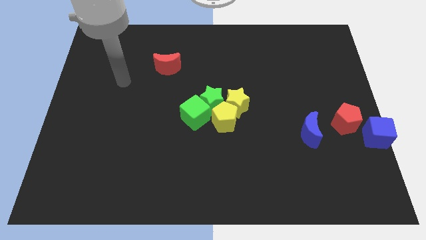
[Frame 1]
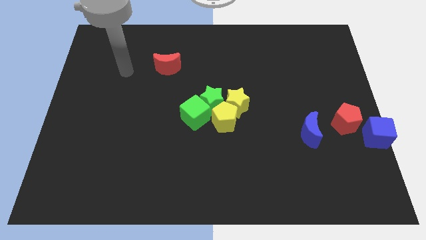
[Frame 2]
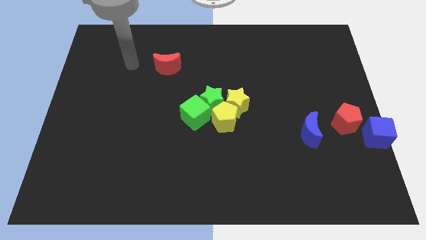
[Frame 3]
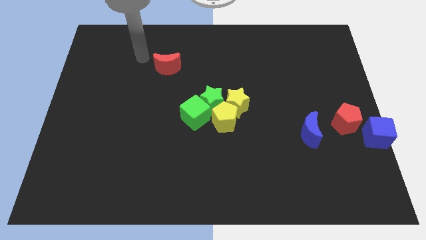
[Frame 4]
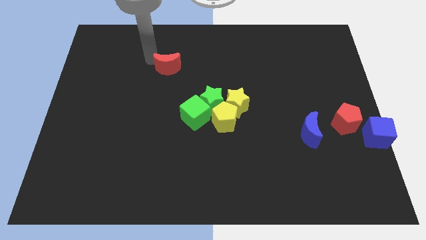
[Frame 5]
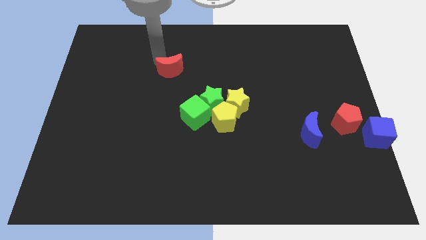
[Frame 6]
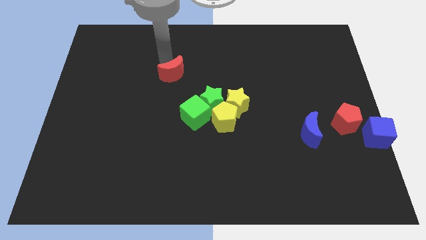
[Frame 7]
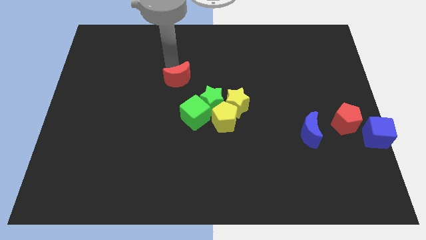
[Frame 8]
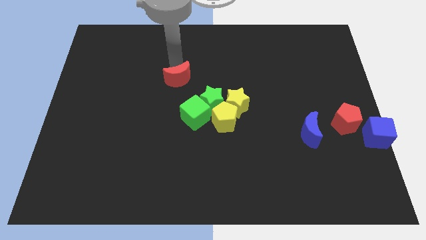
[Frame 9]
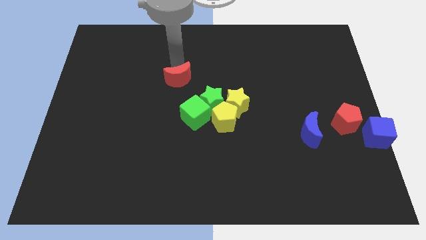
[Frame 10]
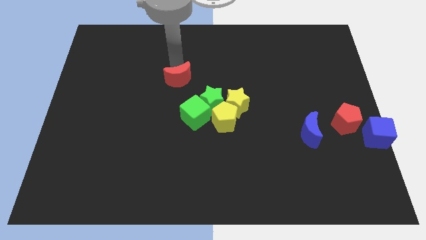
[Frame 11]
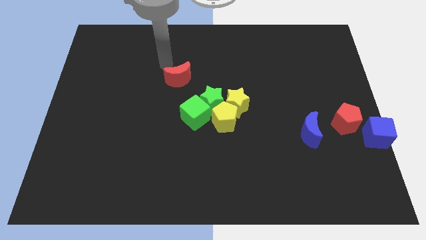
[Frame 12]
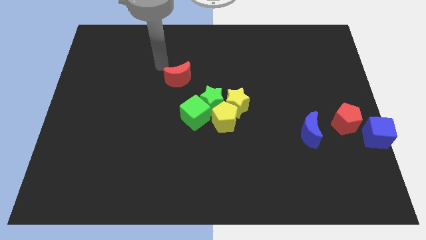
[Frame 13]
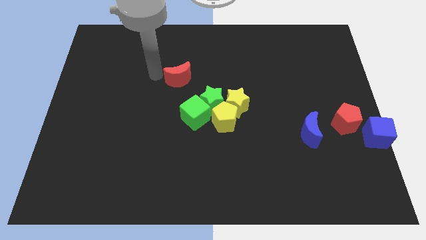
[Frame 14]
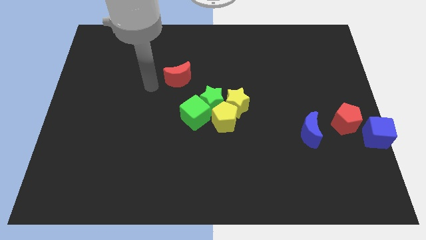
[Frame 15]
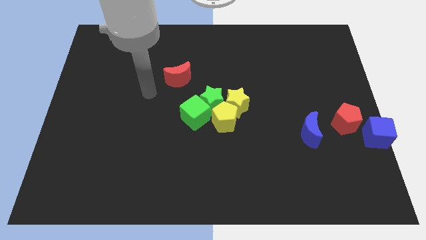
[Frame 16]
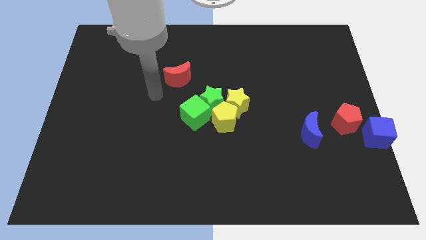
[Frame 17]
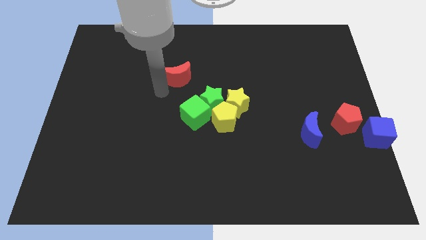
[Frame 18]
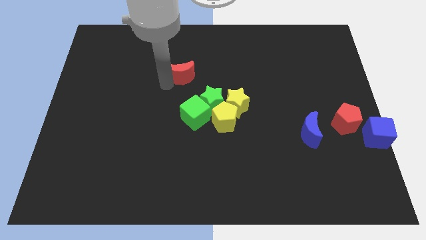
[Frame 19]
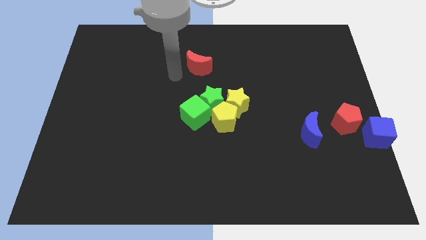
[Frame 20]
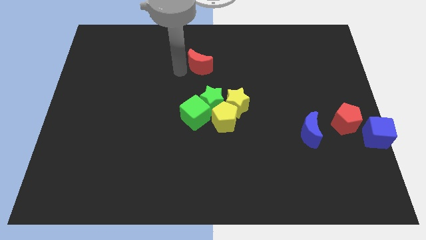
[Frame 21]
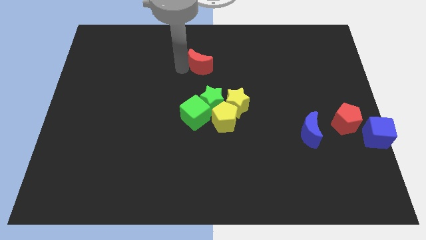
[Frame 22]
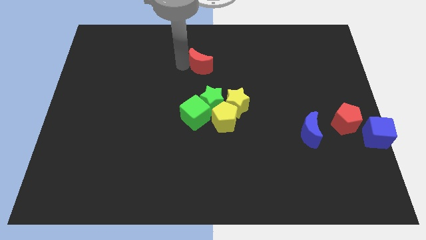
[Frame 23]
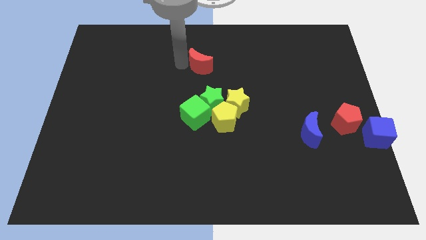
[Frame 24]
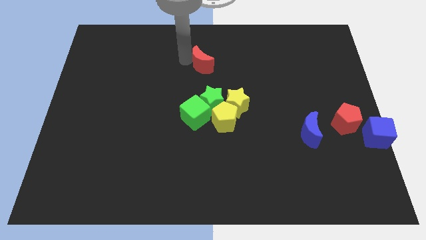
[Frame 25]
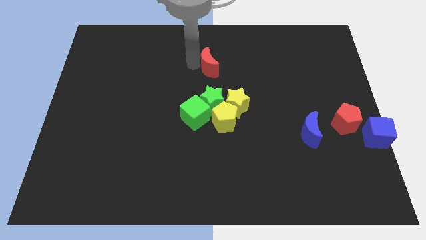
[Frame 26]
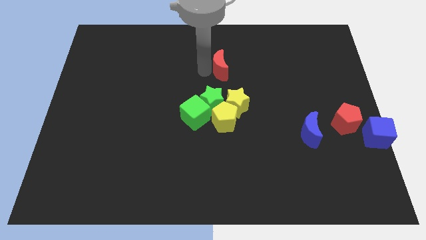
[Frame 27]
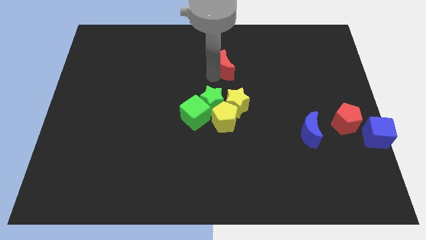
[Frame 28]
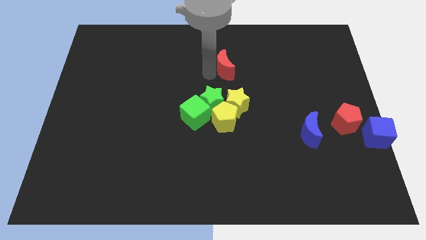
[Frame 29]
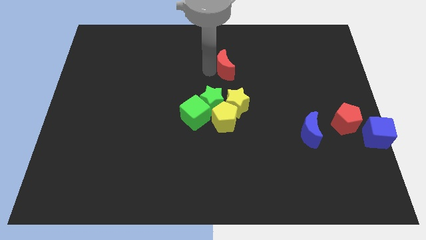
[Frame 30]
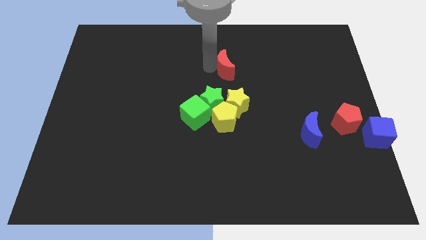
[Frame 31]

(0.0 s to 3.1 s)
move the red moon diagonally top right to the green star

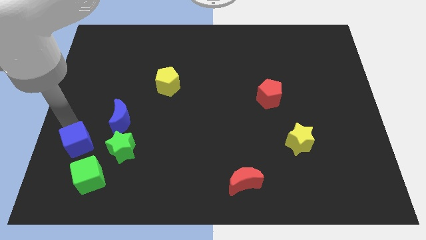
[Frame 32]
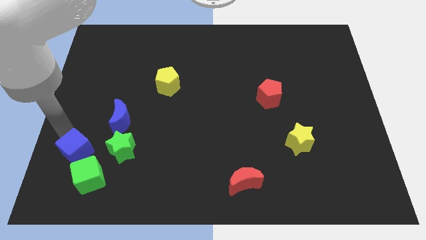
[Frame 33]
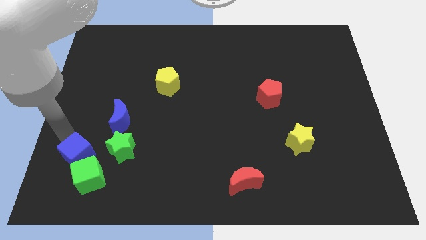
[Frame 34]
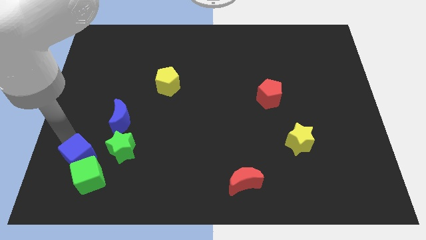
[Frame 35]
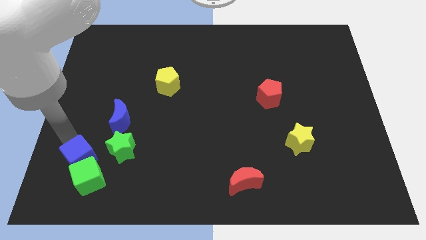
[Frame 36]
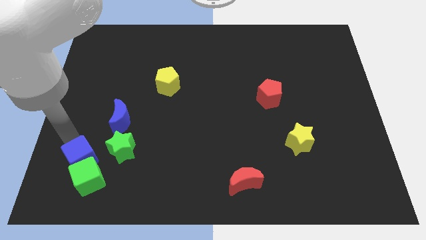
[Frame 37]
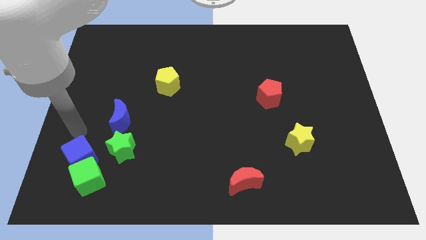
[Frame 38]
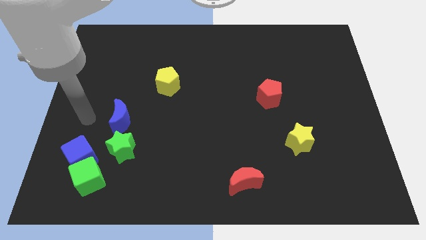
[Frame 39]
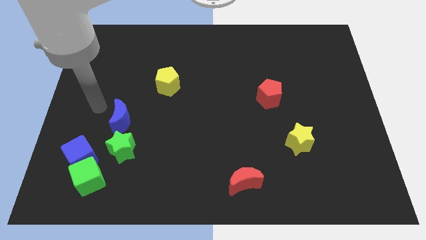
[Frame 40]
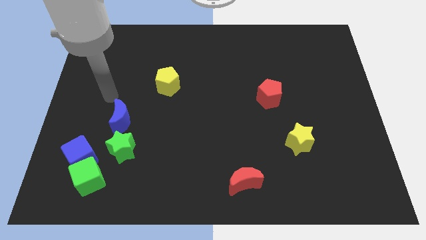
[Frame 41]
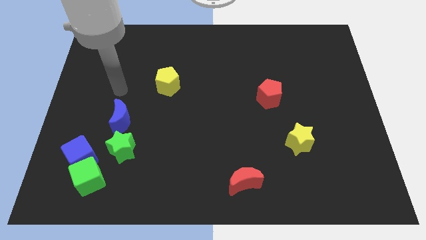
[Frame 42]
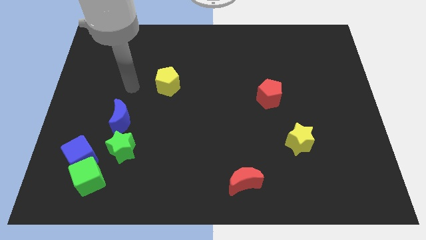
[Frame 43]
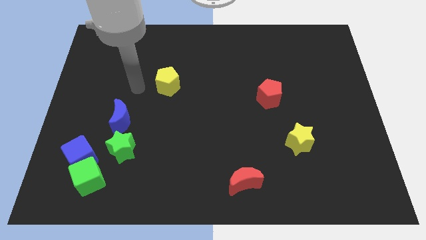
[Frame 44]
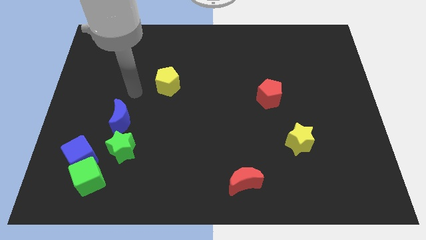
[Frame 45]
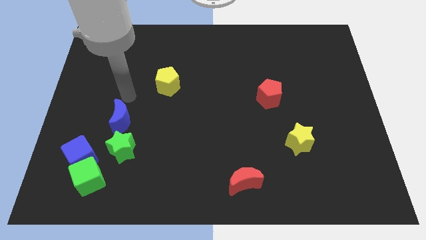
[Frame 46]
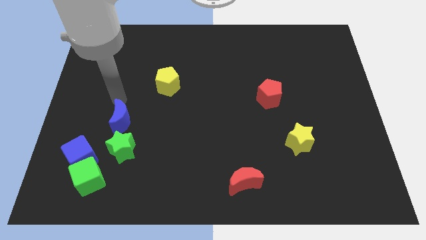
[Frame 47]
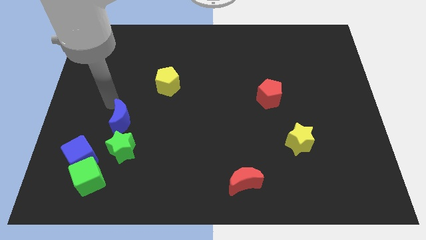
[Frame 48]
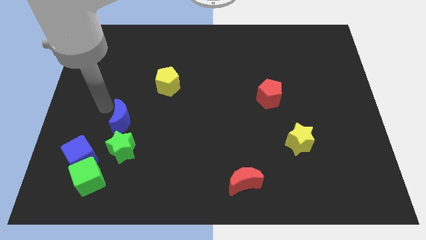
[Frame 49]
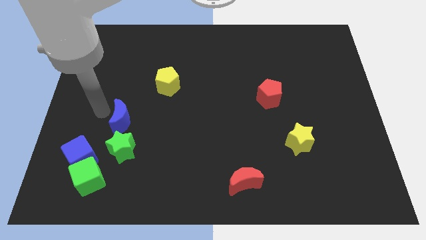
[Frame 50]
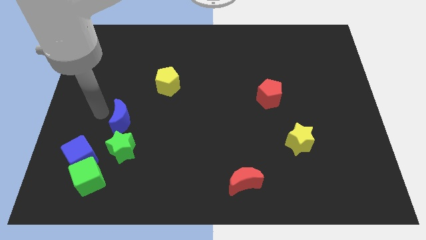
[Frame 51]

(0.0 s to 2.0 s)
move blue cube into the green cube

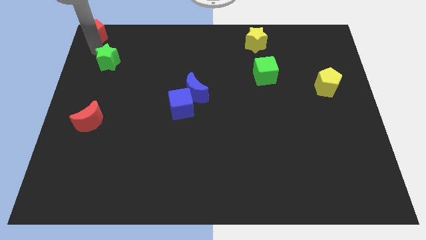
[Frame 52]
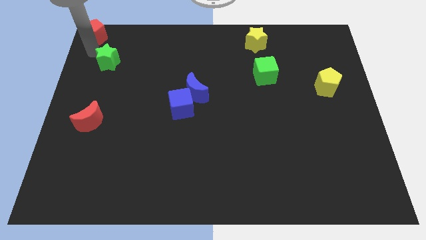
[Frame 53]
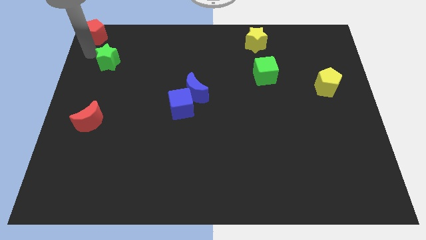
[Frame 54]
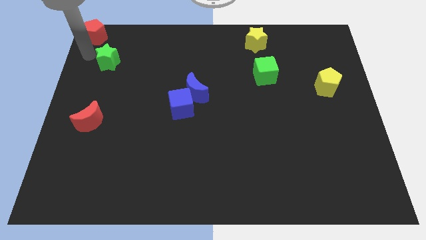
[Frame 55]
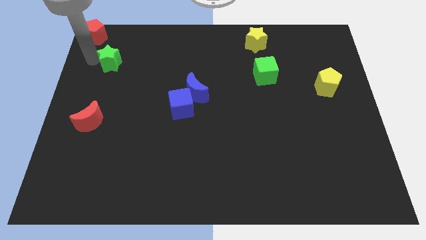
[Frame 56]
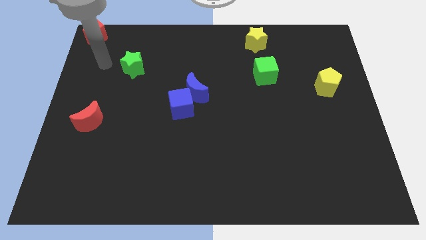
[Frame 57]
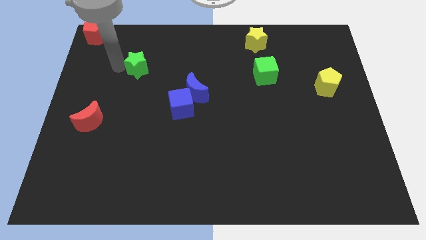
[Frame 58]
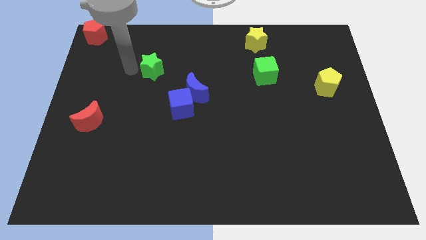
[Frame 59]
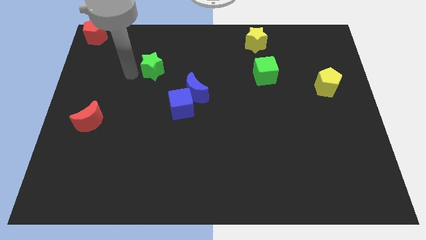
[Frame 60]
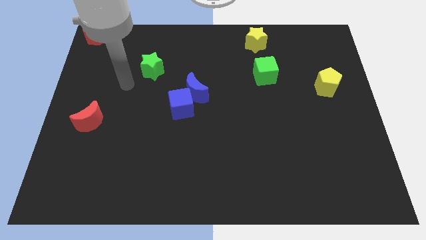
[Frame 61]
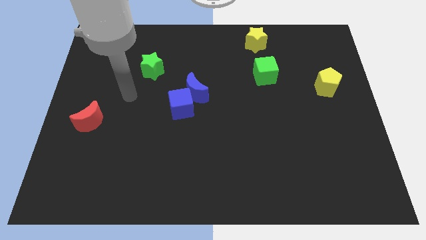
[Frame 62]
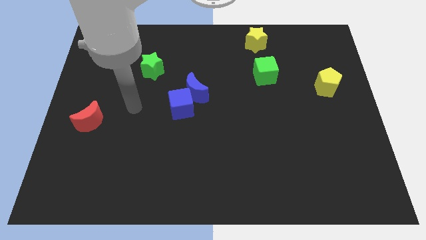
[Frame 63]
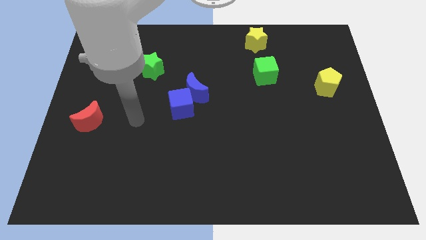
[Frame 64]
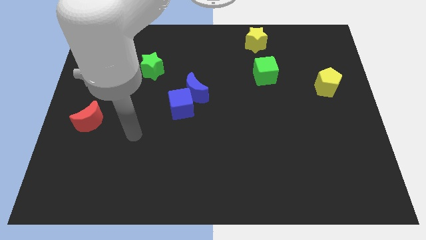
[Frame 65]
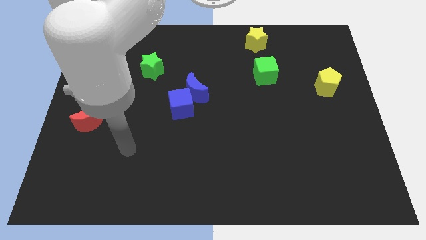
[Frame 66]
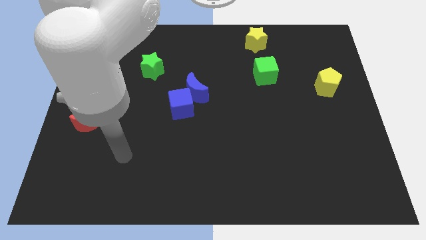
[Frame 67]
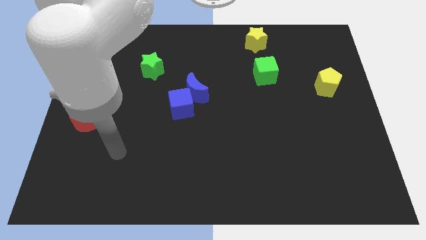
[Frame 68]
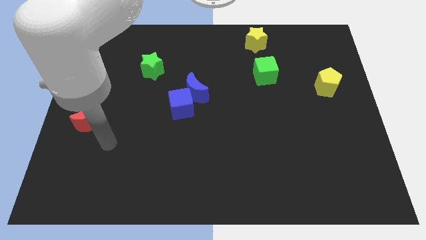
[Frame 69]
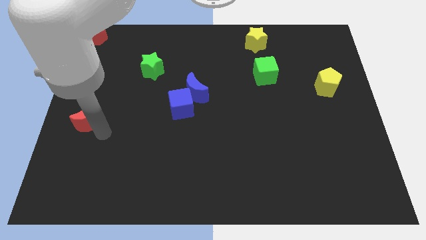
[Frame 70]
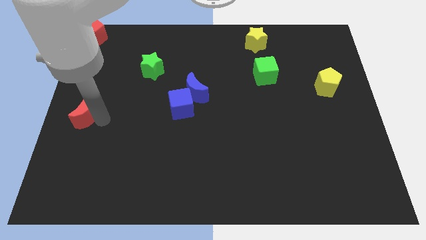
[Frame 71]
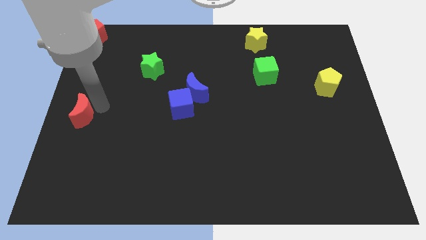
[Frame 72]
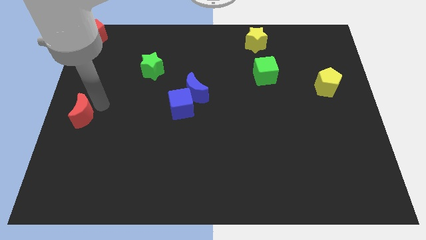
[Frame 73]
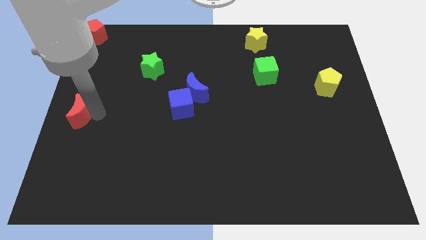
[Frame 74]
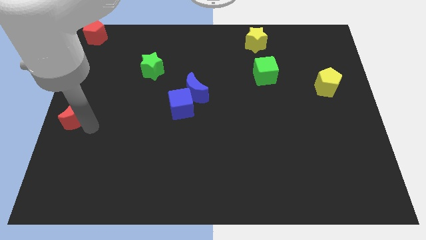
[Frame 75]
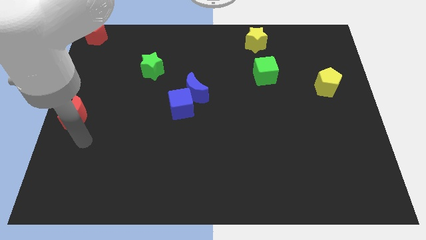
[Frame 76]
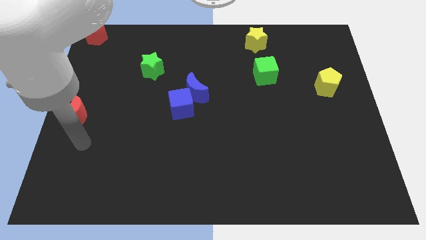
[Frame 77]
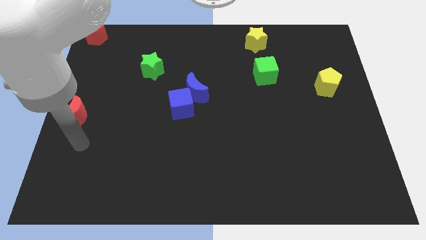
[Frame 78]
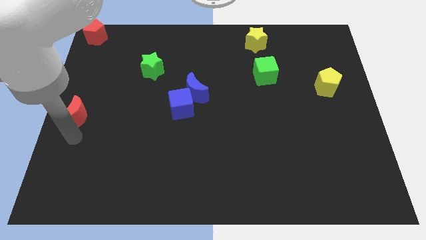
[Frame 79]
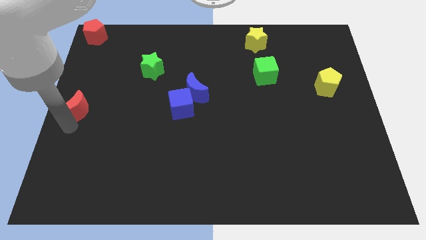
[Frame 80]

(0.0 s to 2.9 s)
move the red crescent to the left center of the board

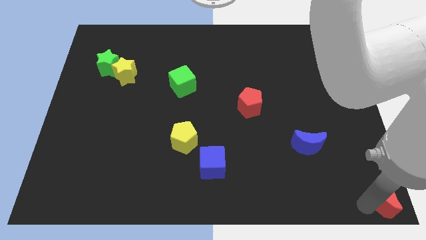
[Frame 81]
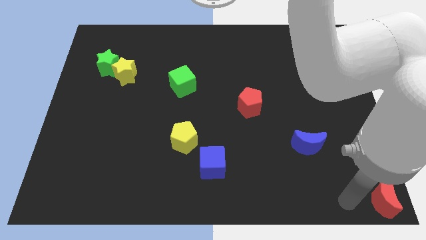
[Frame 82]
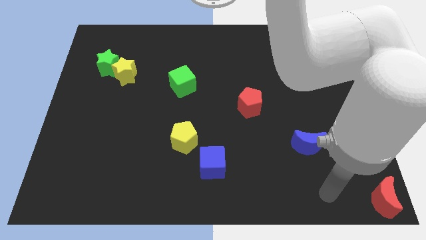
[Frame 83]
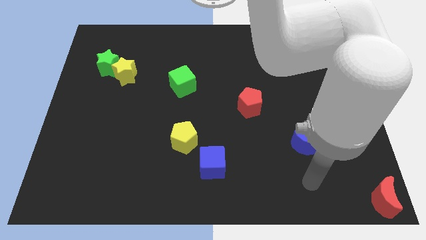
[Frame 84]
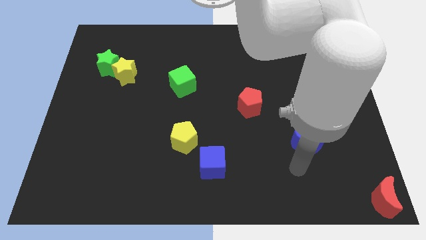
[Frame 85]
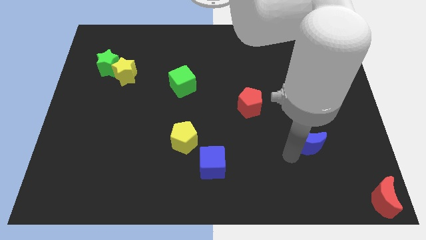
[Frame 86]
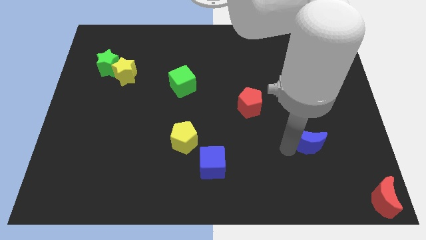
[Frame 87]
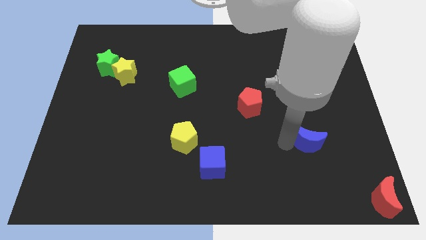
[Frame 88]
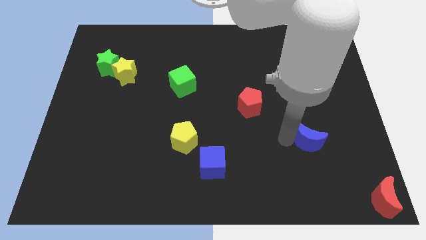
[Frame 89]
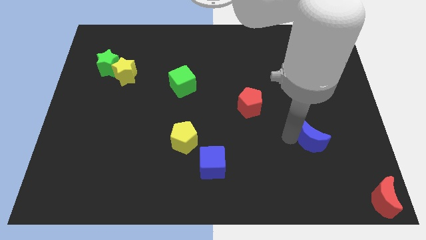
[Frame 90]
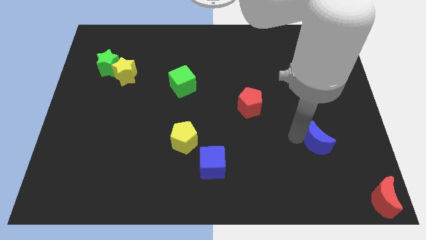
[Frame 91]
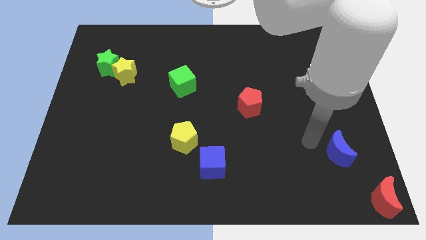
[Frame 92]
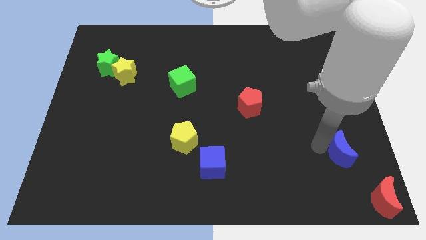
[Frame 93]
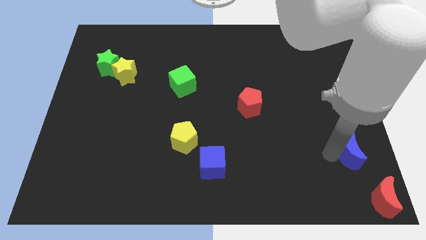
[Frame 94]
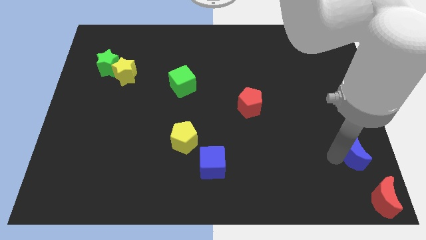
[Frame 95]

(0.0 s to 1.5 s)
push the blue moon on top of red moon
